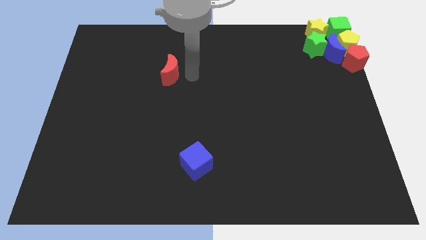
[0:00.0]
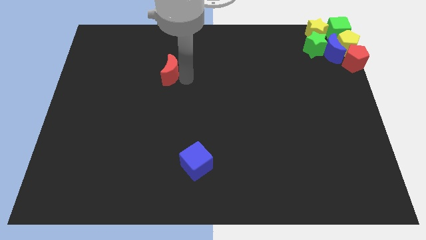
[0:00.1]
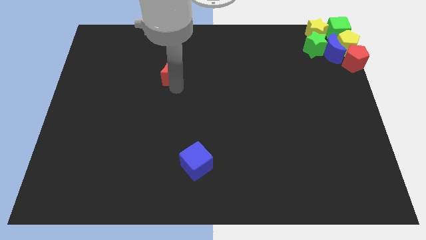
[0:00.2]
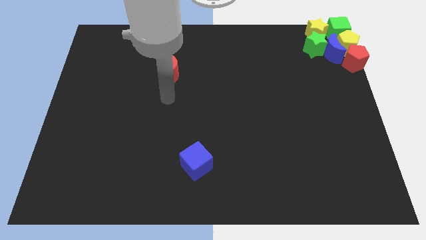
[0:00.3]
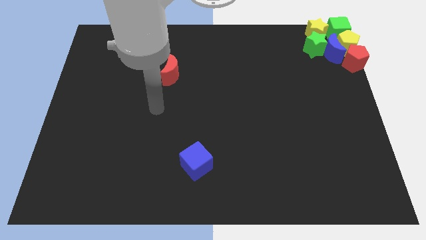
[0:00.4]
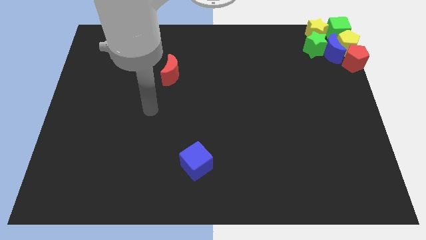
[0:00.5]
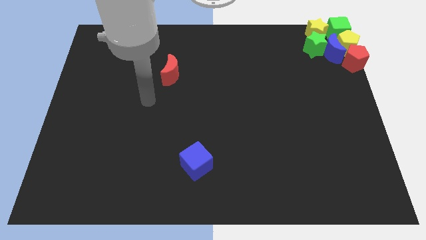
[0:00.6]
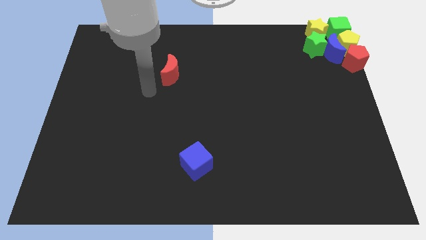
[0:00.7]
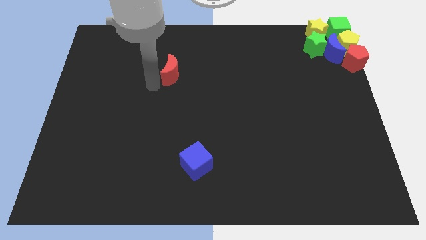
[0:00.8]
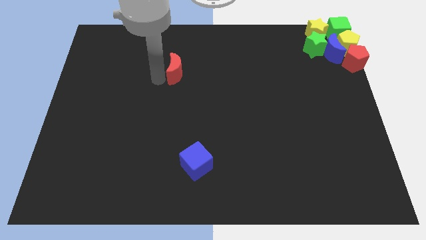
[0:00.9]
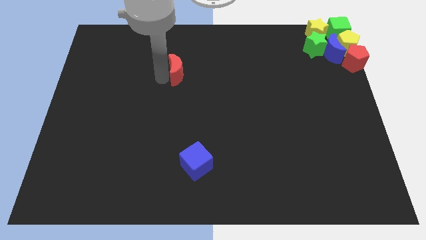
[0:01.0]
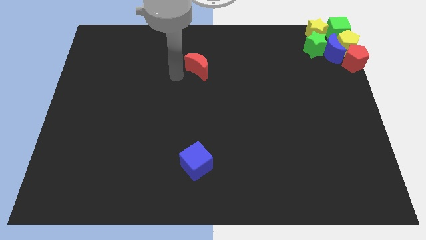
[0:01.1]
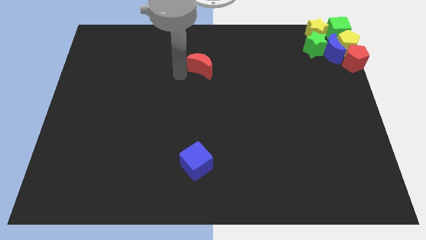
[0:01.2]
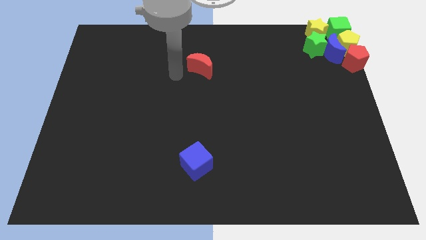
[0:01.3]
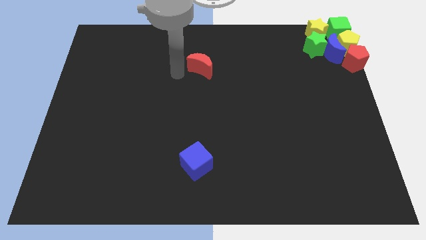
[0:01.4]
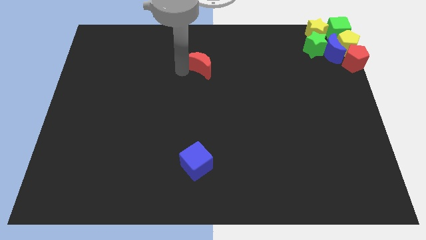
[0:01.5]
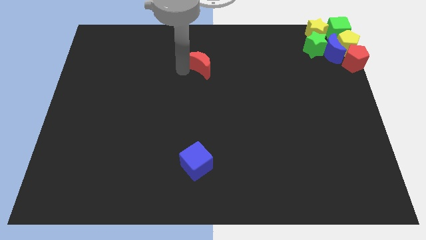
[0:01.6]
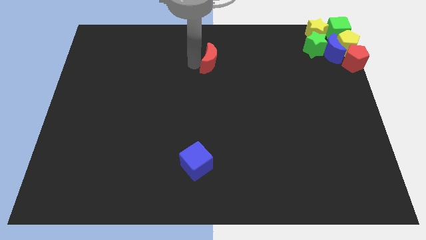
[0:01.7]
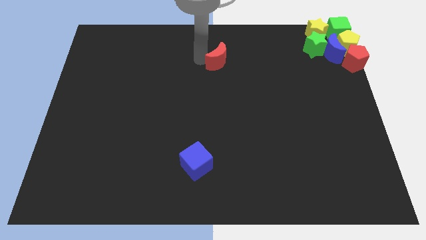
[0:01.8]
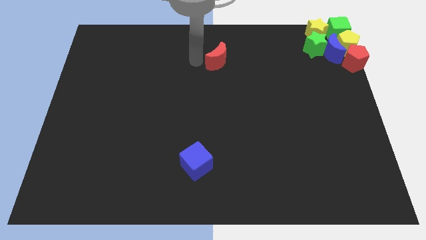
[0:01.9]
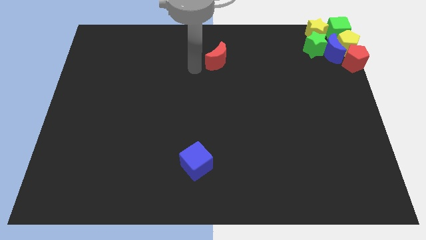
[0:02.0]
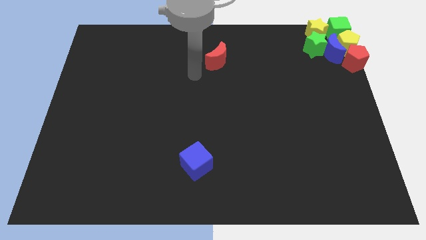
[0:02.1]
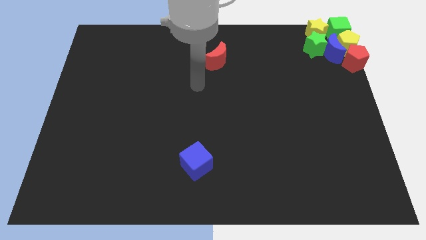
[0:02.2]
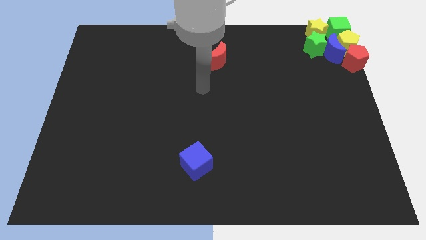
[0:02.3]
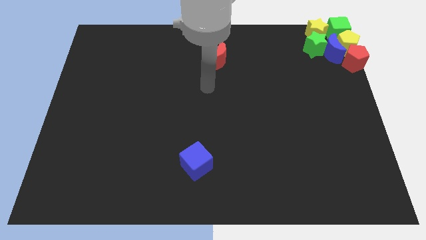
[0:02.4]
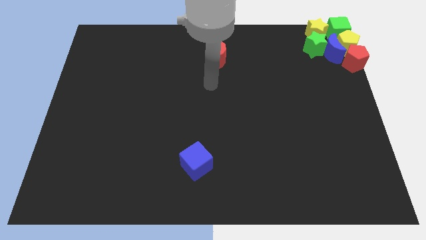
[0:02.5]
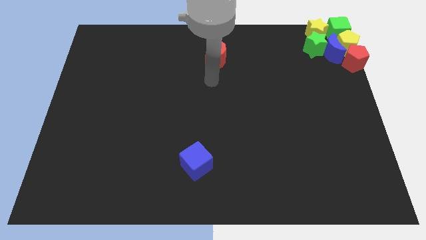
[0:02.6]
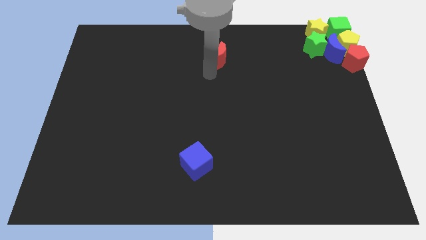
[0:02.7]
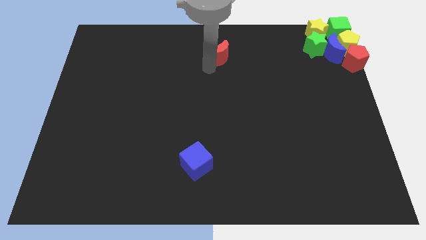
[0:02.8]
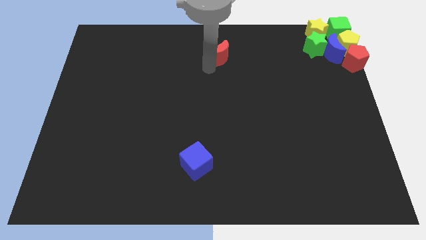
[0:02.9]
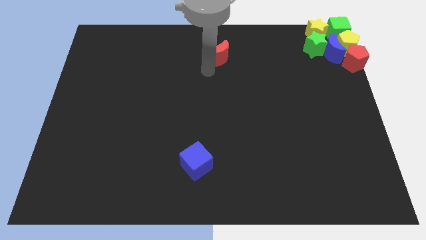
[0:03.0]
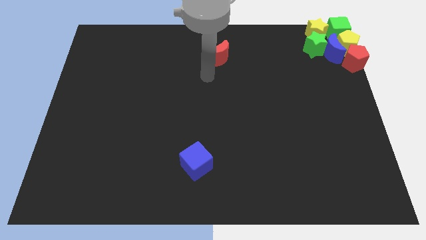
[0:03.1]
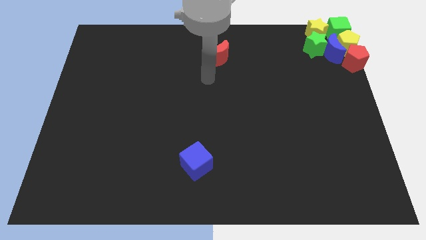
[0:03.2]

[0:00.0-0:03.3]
push the red crescent to the top side of the board

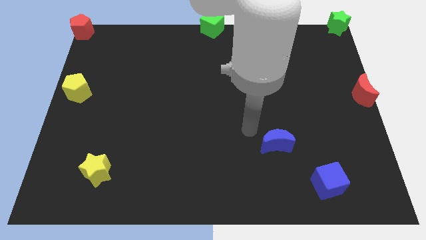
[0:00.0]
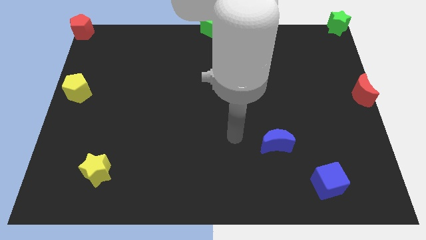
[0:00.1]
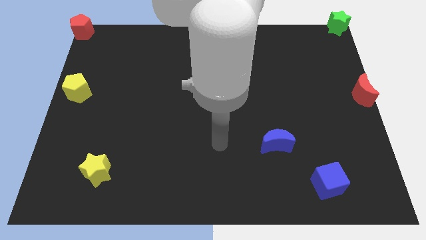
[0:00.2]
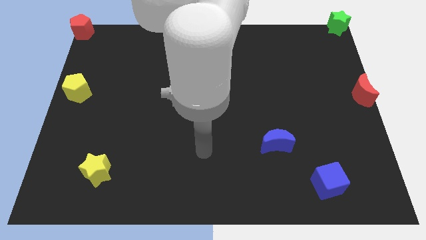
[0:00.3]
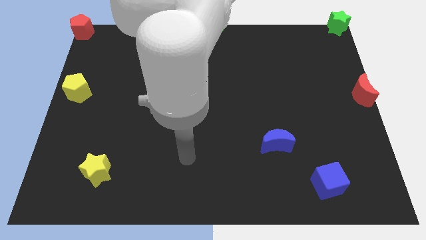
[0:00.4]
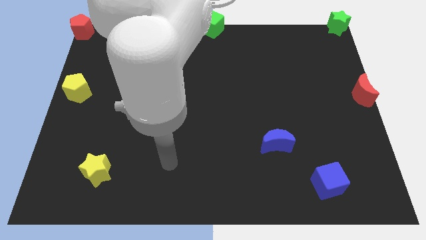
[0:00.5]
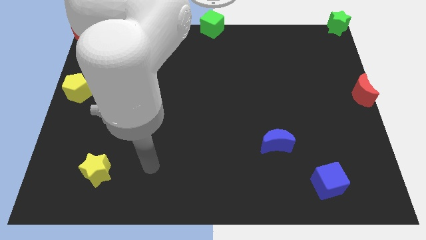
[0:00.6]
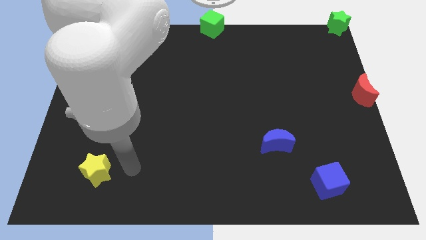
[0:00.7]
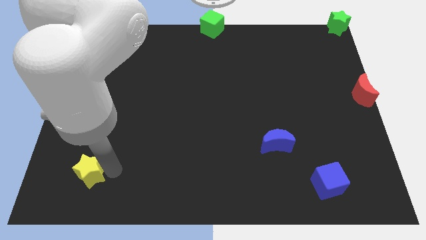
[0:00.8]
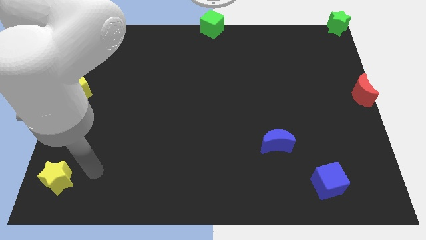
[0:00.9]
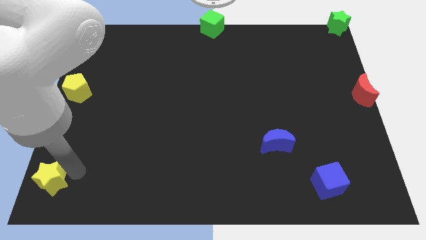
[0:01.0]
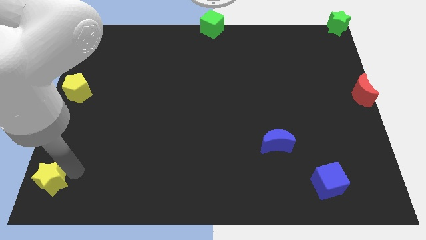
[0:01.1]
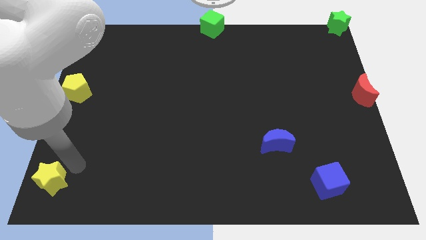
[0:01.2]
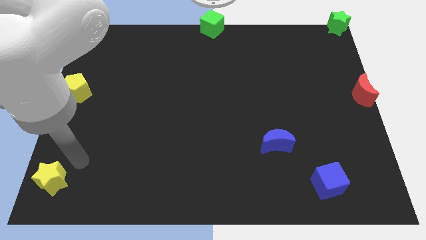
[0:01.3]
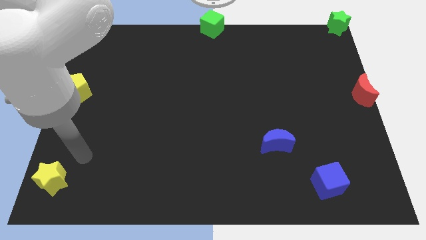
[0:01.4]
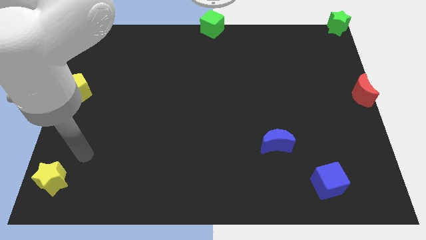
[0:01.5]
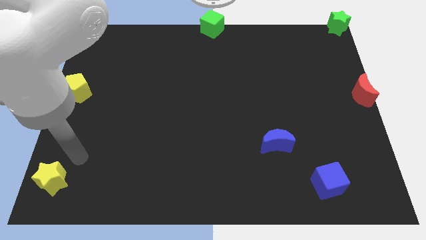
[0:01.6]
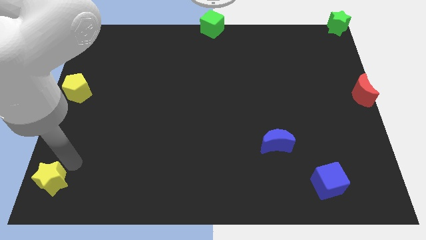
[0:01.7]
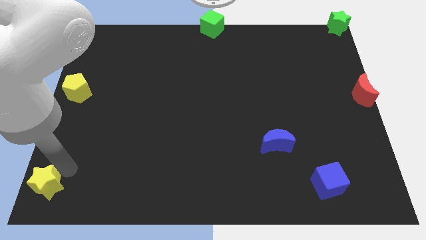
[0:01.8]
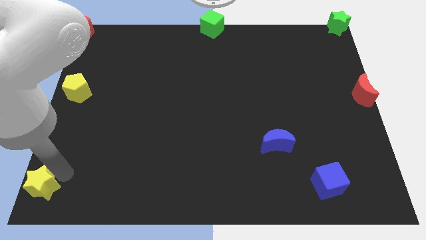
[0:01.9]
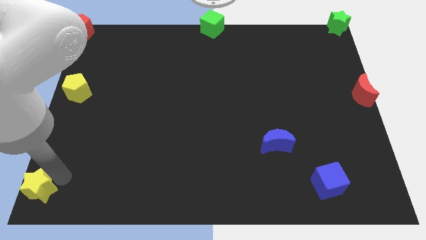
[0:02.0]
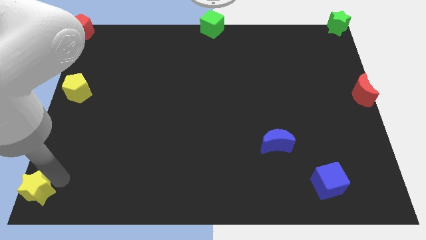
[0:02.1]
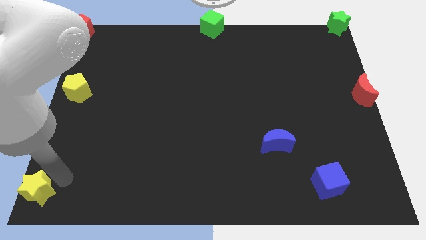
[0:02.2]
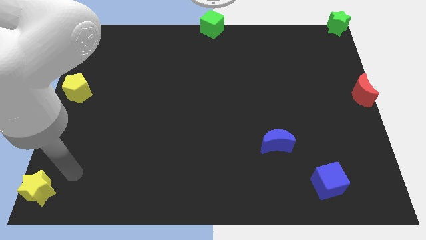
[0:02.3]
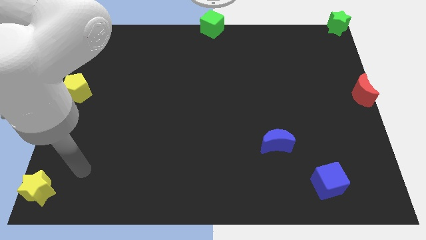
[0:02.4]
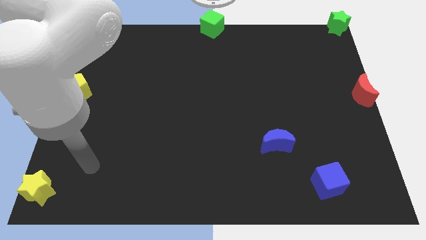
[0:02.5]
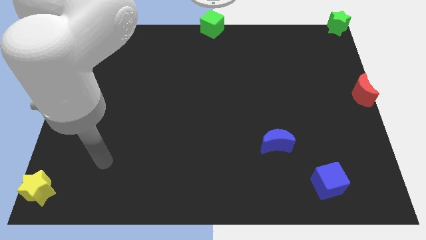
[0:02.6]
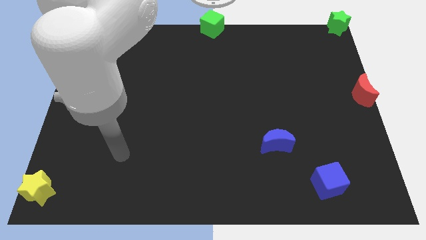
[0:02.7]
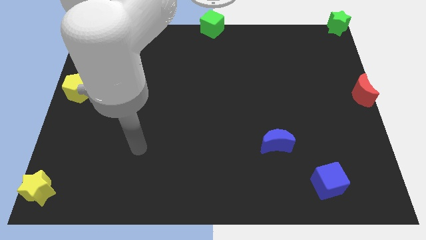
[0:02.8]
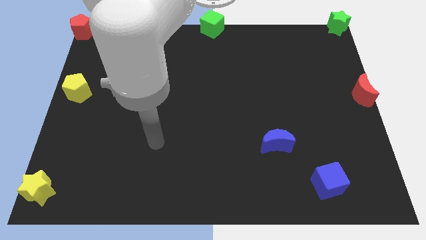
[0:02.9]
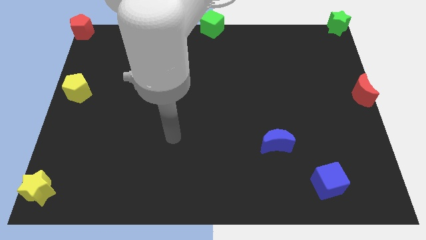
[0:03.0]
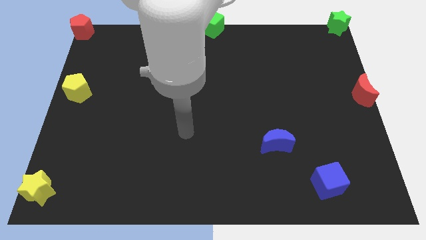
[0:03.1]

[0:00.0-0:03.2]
push the yellow star to the bottom left of the board

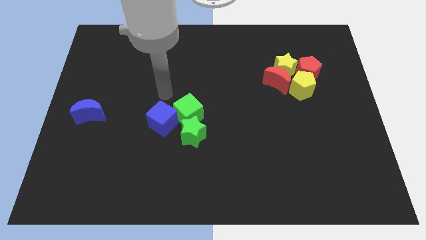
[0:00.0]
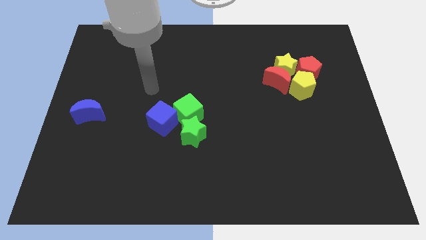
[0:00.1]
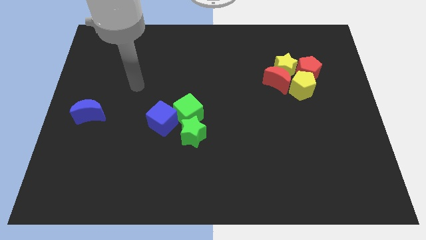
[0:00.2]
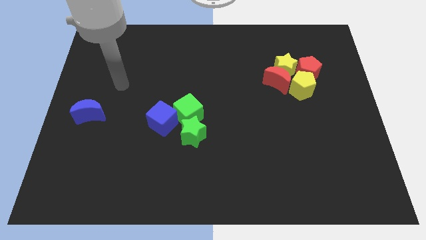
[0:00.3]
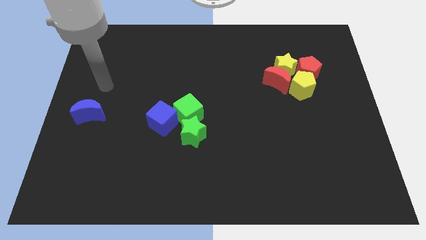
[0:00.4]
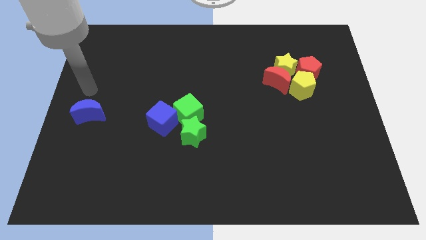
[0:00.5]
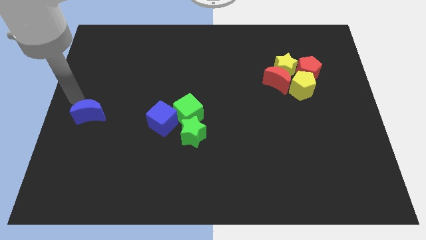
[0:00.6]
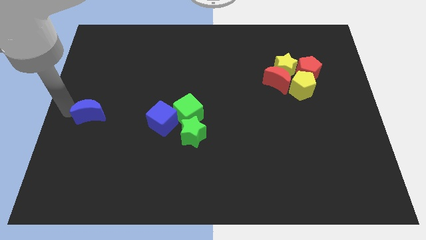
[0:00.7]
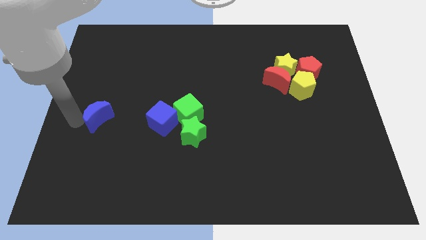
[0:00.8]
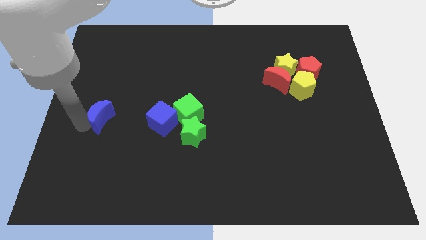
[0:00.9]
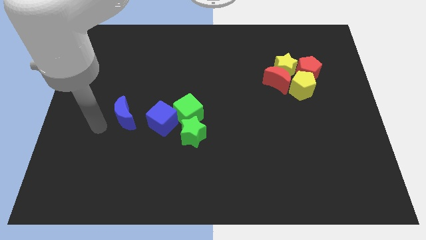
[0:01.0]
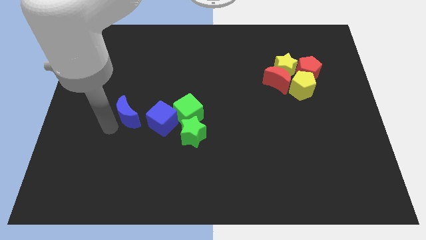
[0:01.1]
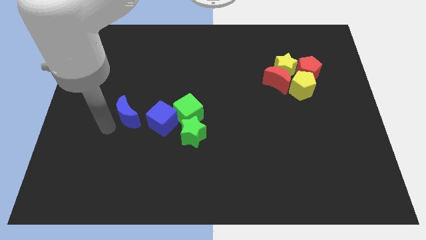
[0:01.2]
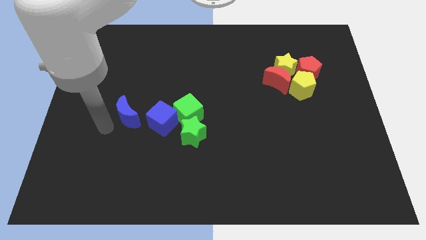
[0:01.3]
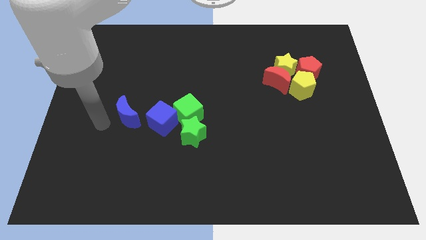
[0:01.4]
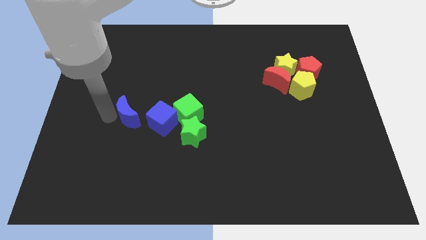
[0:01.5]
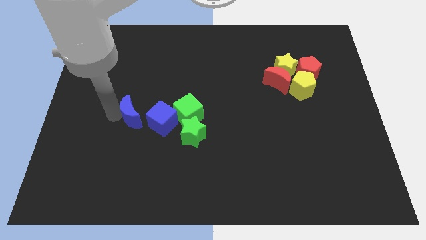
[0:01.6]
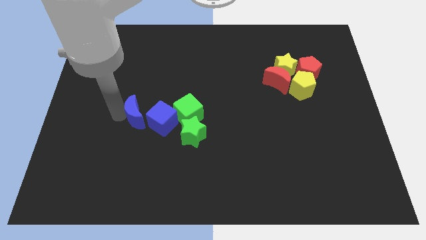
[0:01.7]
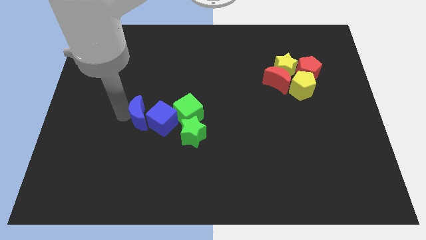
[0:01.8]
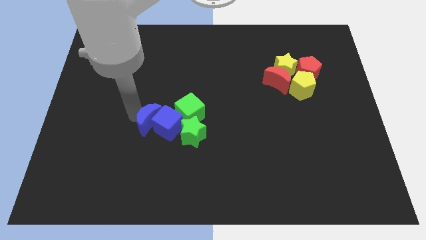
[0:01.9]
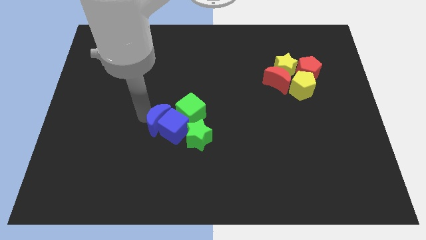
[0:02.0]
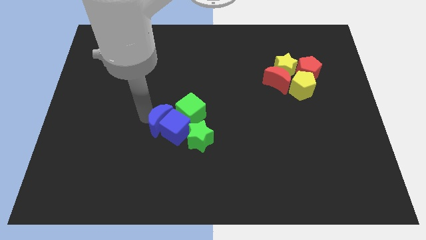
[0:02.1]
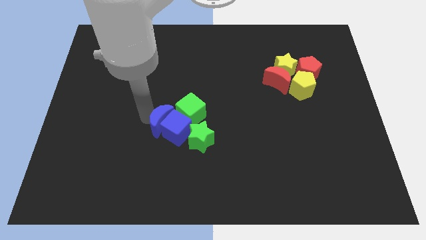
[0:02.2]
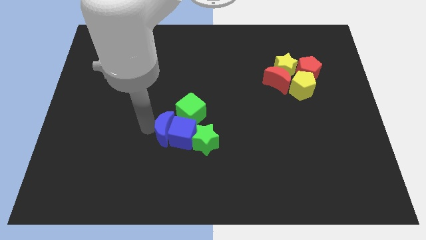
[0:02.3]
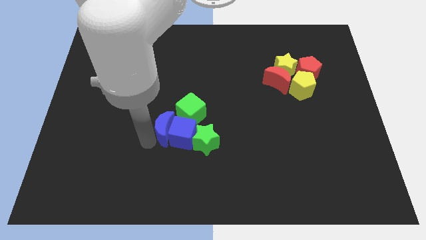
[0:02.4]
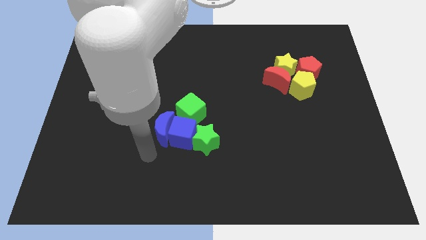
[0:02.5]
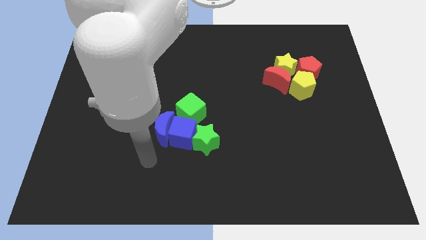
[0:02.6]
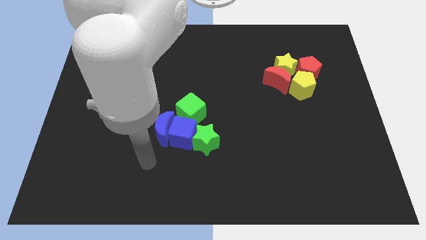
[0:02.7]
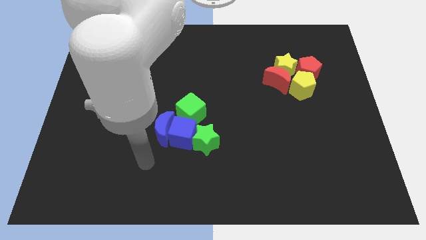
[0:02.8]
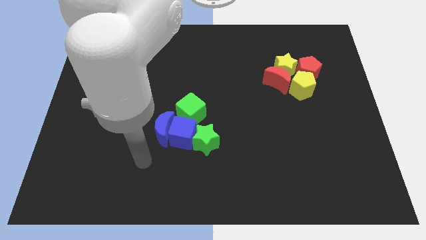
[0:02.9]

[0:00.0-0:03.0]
move the blue moon into the blue cube
